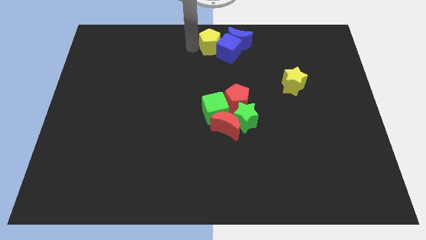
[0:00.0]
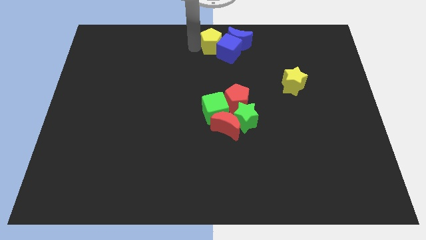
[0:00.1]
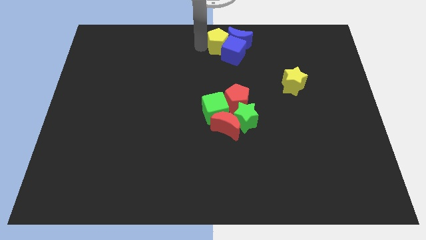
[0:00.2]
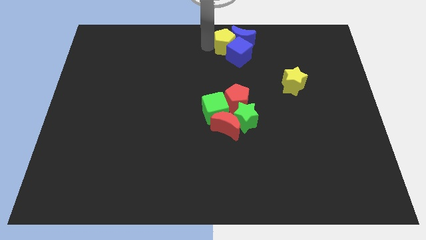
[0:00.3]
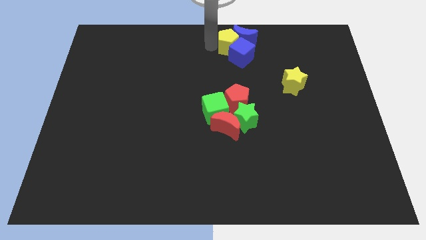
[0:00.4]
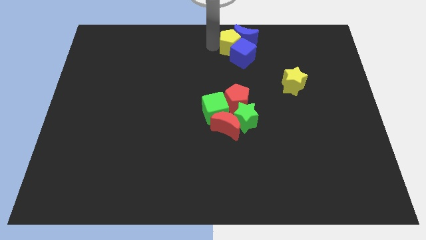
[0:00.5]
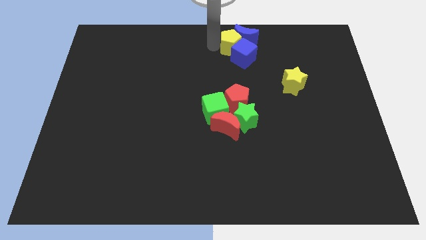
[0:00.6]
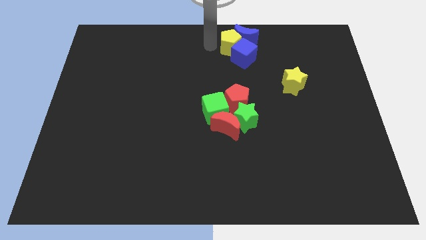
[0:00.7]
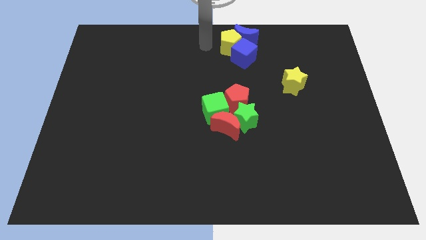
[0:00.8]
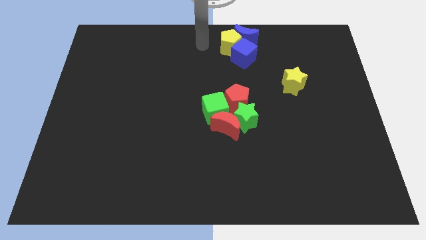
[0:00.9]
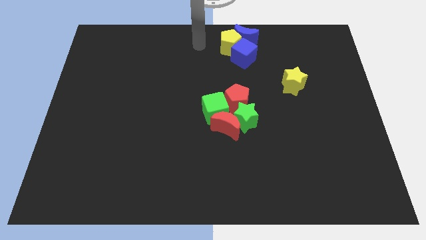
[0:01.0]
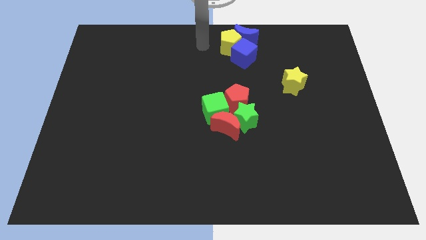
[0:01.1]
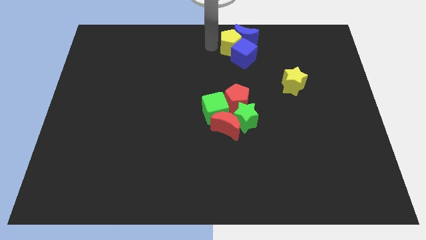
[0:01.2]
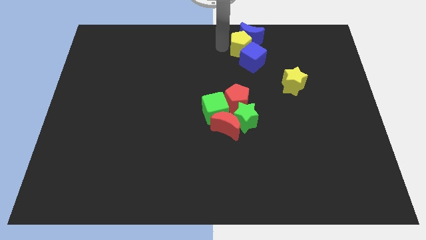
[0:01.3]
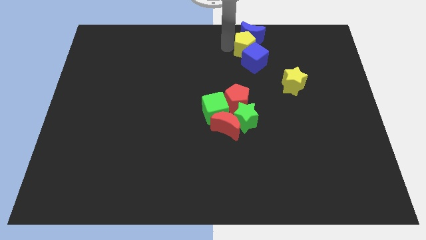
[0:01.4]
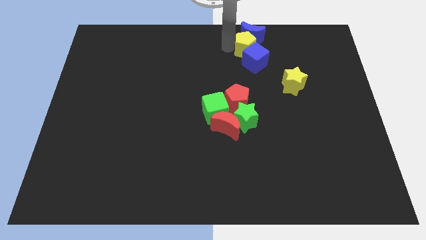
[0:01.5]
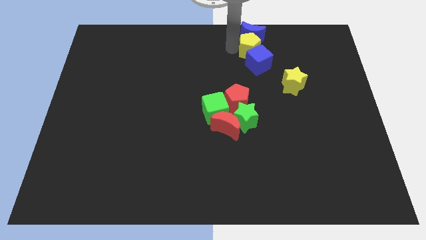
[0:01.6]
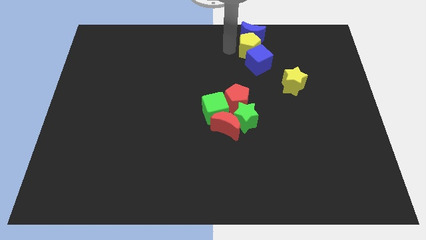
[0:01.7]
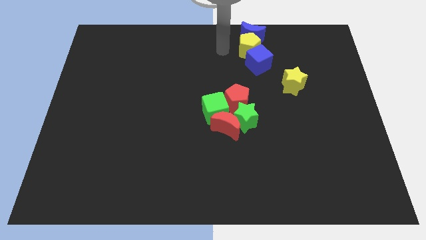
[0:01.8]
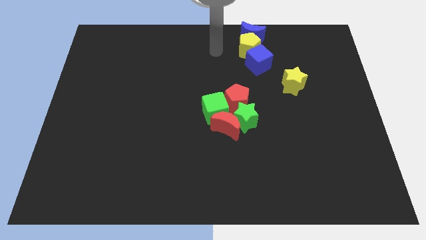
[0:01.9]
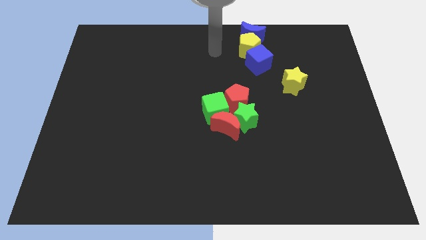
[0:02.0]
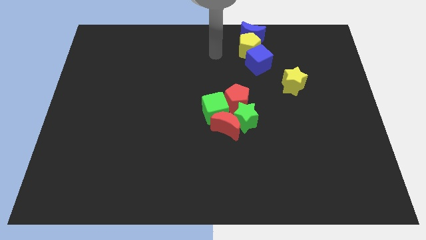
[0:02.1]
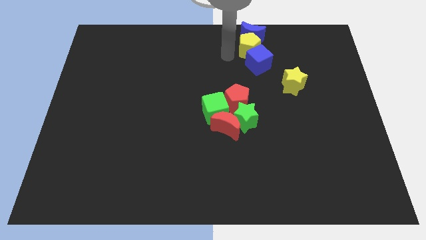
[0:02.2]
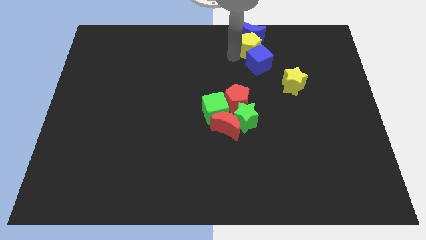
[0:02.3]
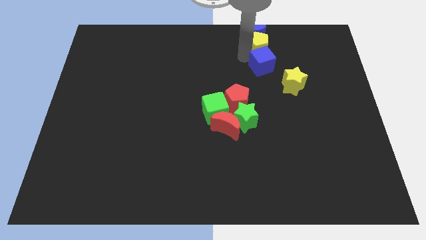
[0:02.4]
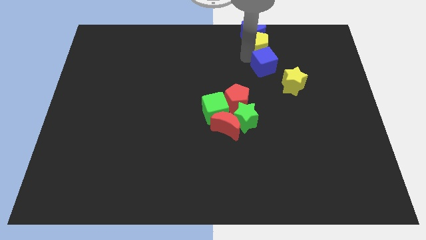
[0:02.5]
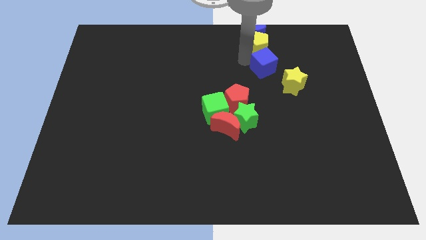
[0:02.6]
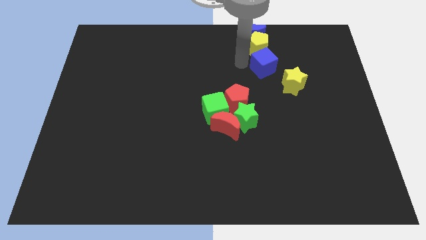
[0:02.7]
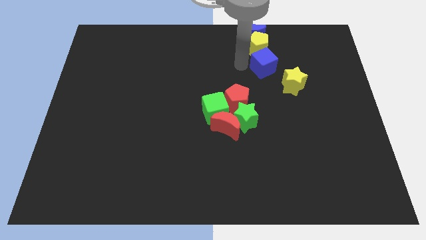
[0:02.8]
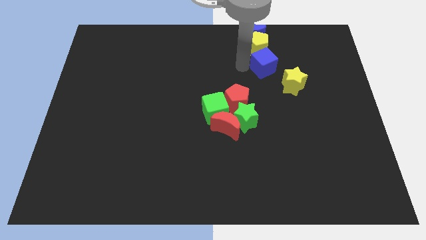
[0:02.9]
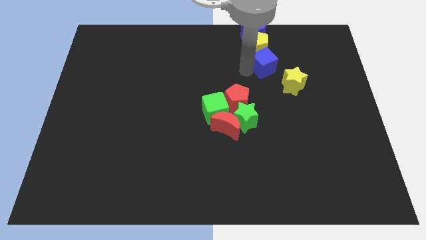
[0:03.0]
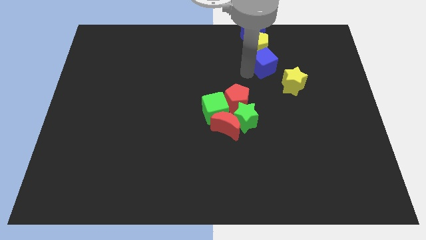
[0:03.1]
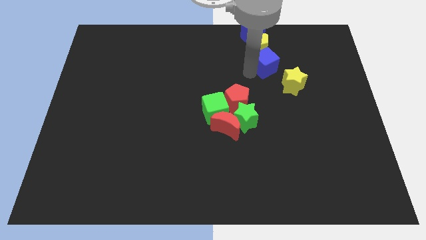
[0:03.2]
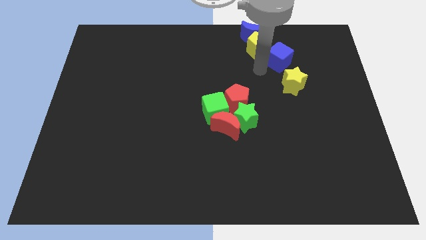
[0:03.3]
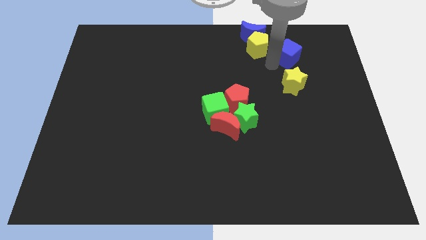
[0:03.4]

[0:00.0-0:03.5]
push blue cube above yellow star

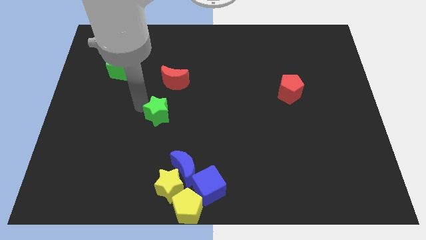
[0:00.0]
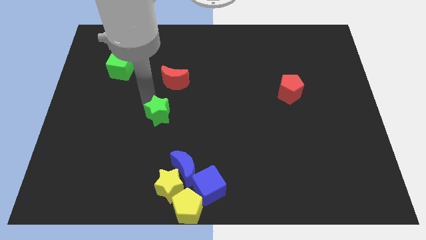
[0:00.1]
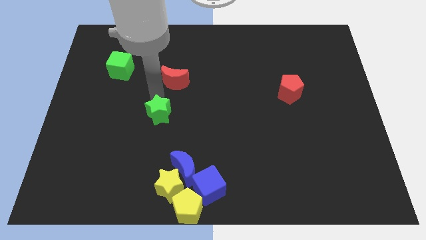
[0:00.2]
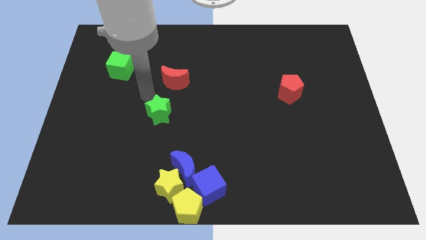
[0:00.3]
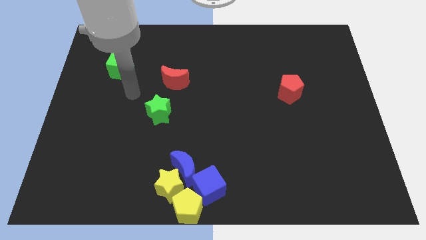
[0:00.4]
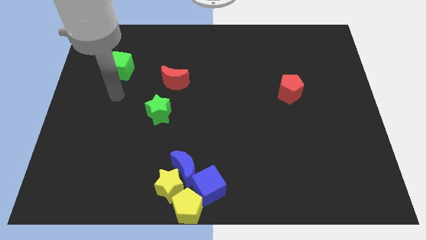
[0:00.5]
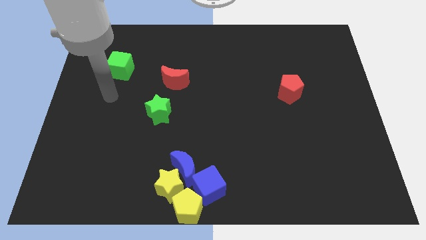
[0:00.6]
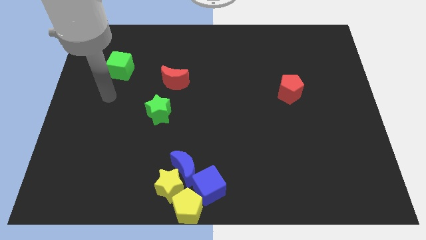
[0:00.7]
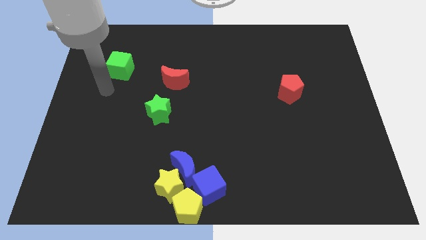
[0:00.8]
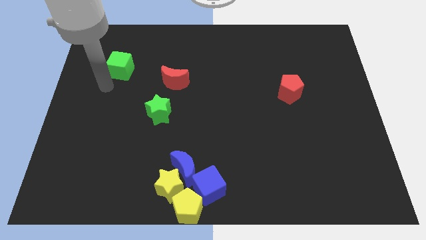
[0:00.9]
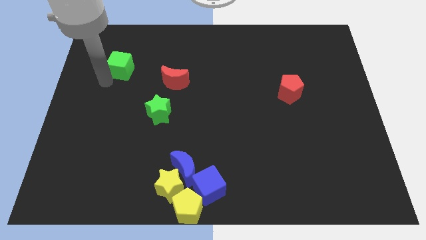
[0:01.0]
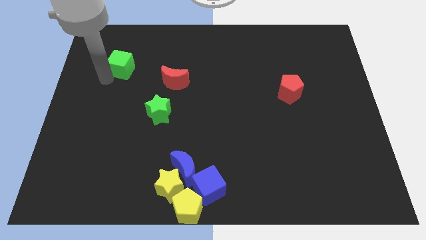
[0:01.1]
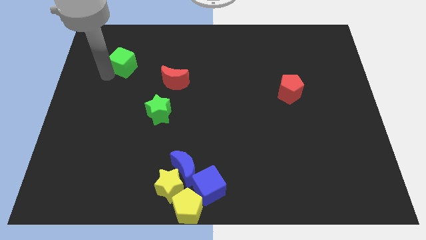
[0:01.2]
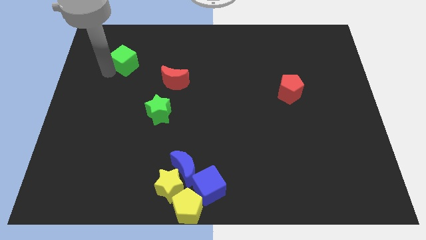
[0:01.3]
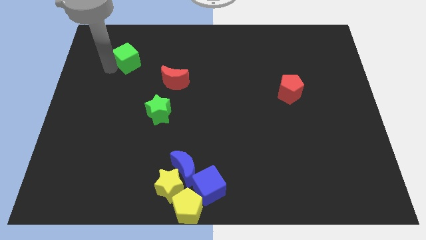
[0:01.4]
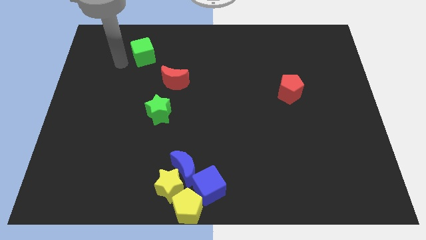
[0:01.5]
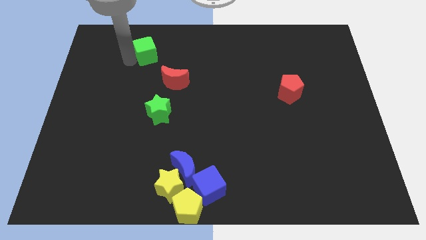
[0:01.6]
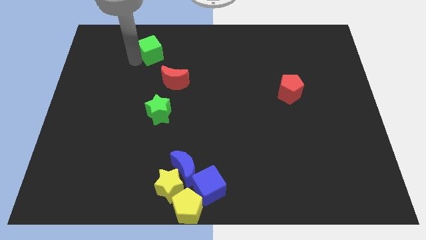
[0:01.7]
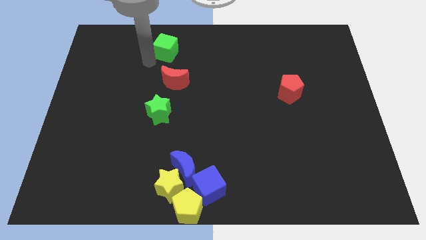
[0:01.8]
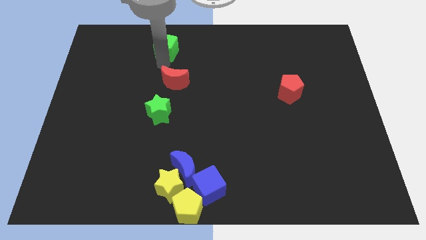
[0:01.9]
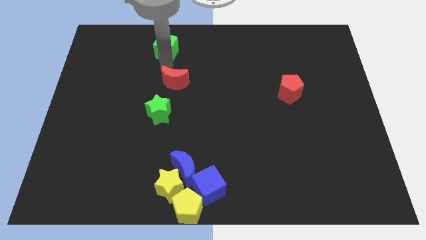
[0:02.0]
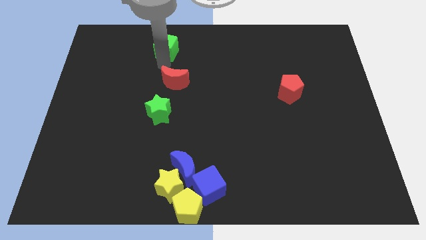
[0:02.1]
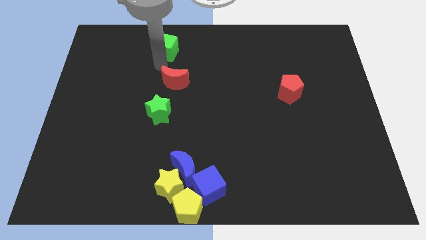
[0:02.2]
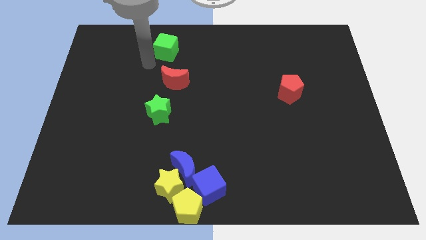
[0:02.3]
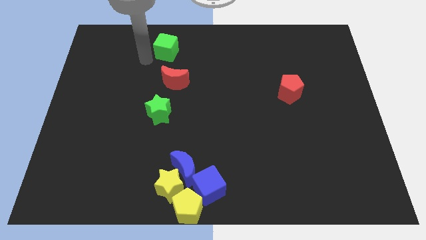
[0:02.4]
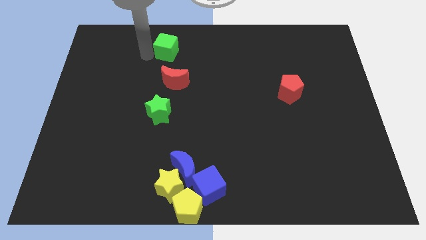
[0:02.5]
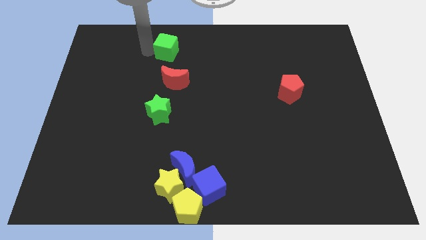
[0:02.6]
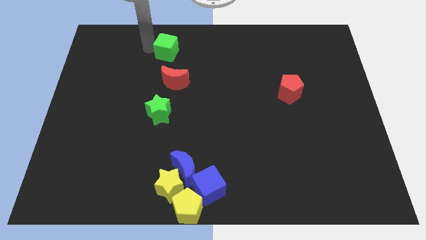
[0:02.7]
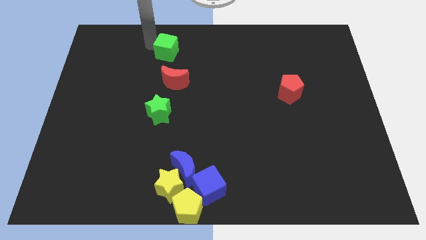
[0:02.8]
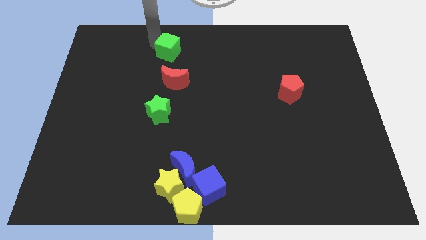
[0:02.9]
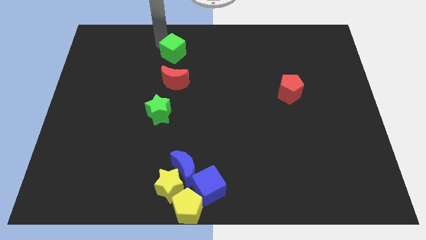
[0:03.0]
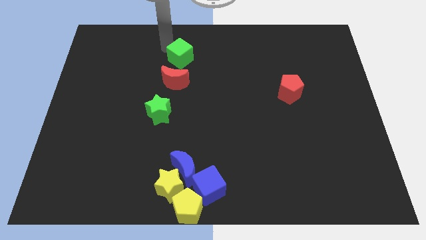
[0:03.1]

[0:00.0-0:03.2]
move the green cube to the top of the red crescent

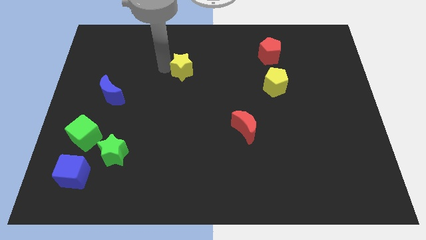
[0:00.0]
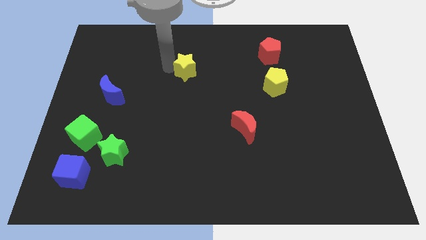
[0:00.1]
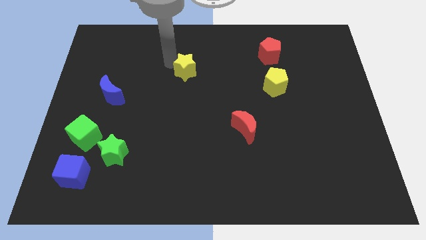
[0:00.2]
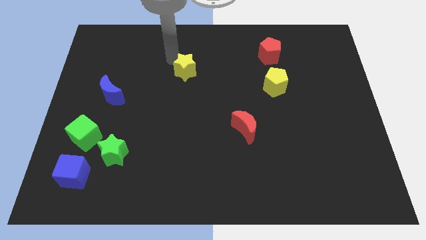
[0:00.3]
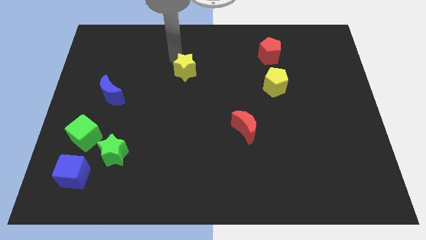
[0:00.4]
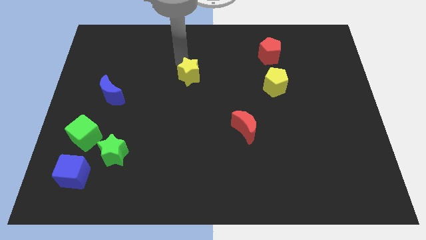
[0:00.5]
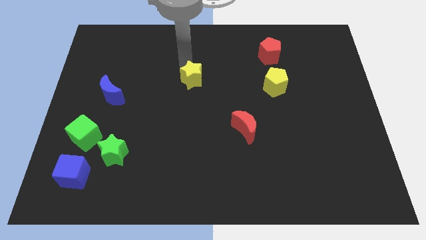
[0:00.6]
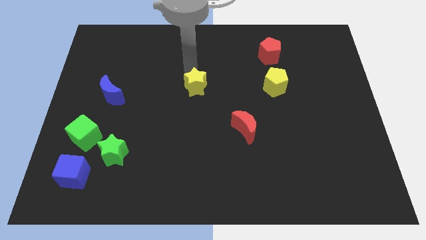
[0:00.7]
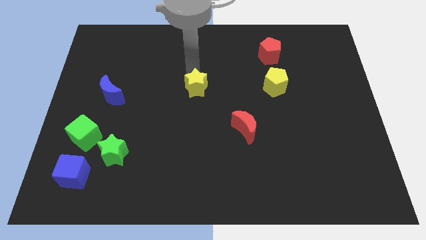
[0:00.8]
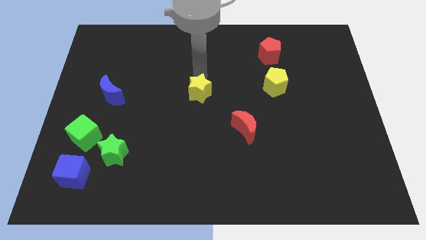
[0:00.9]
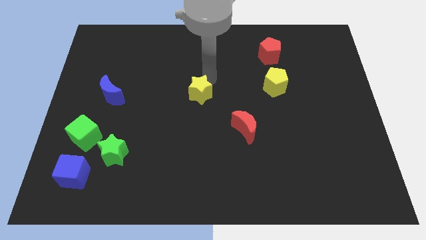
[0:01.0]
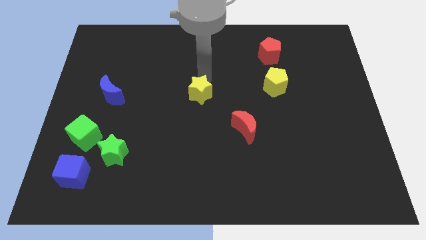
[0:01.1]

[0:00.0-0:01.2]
move the yellow star to the right of the blue crescent

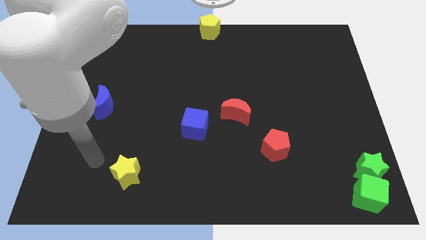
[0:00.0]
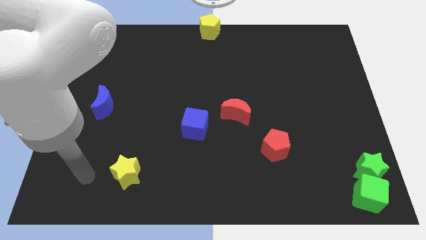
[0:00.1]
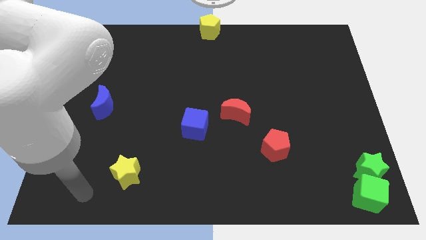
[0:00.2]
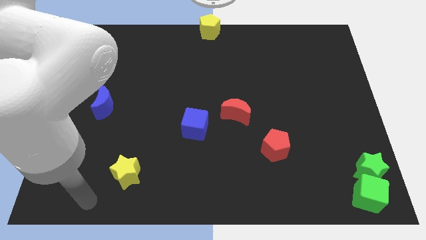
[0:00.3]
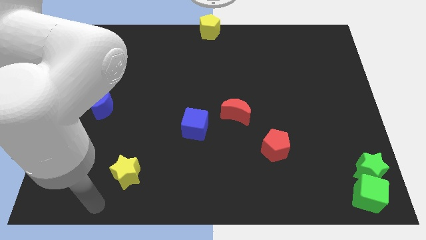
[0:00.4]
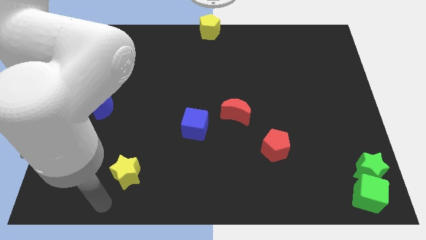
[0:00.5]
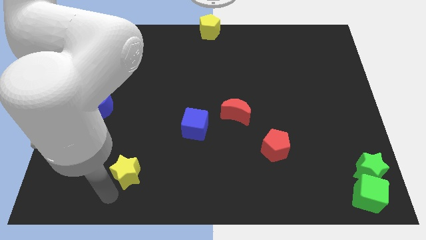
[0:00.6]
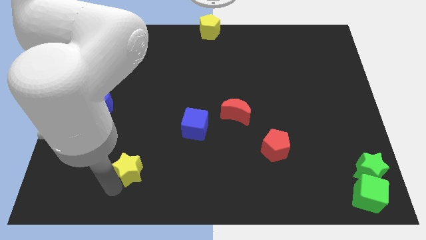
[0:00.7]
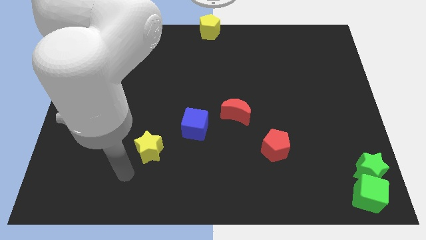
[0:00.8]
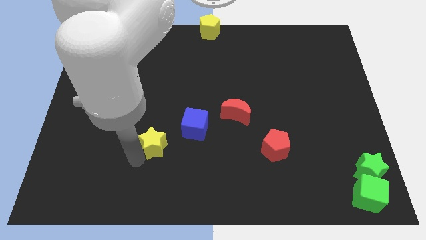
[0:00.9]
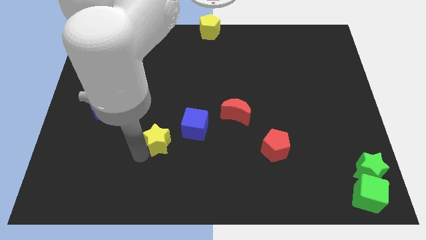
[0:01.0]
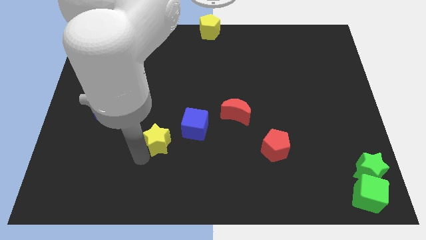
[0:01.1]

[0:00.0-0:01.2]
move yellow star left below the blue cube
